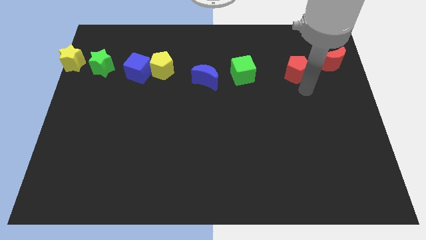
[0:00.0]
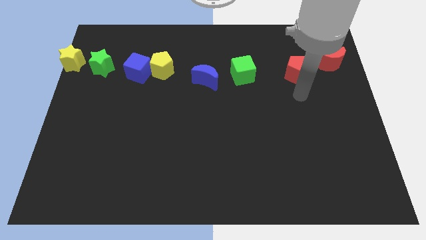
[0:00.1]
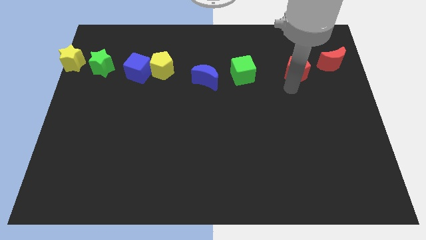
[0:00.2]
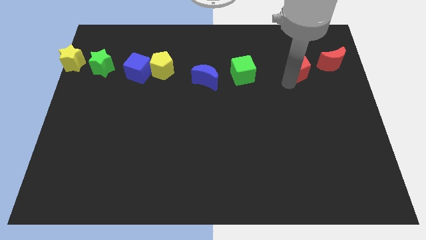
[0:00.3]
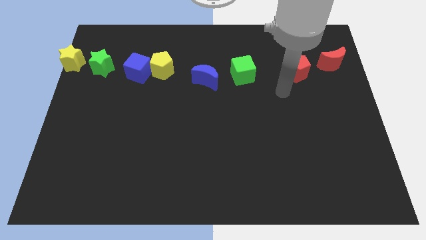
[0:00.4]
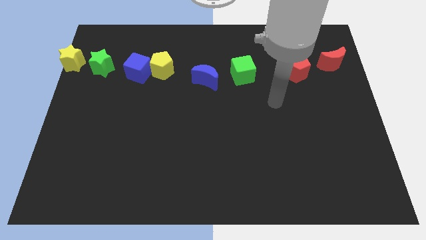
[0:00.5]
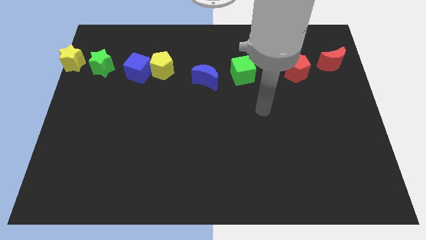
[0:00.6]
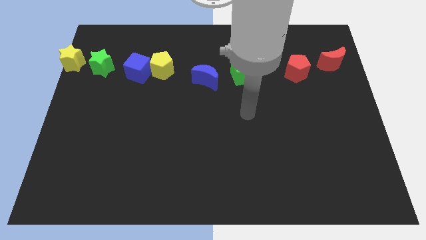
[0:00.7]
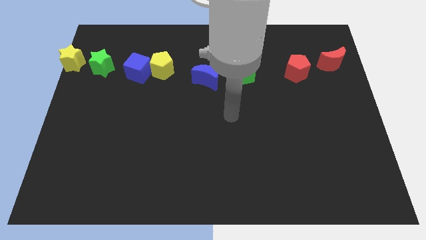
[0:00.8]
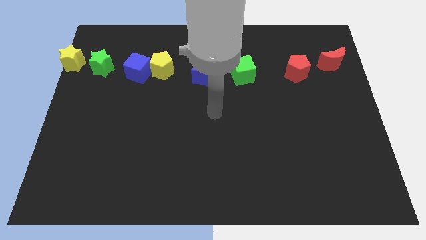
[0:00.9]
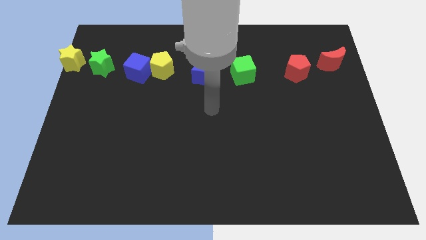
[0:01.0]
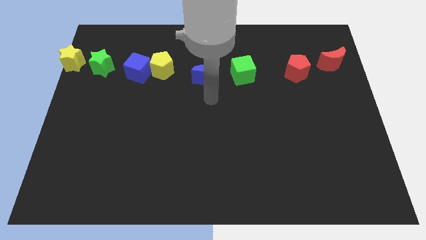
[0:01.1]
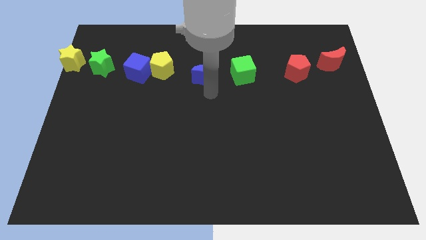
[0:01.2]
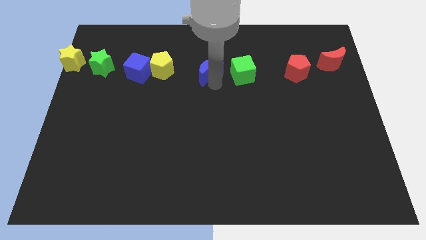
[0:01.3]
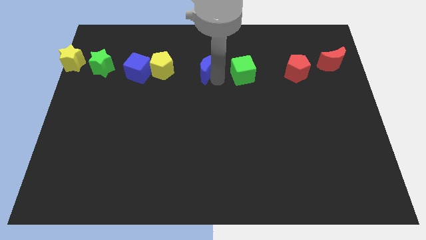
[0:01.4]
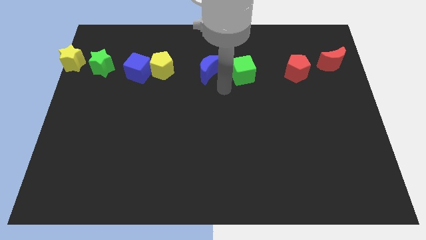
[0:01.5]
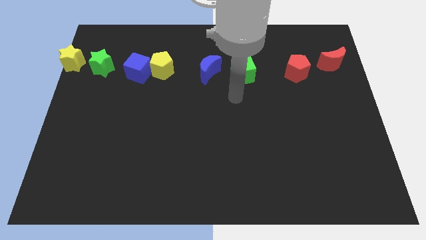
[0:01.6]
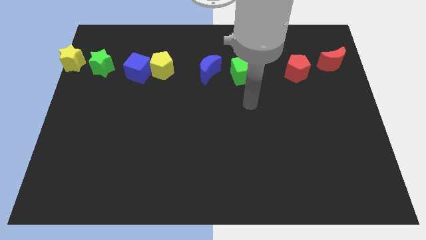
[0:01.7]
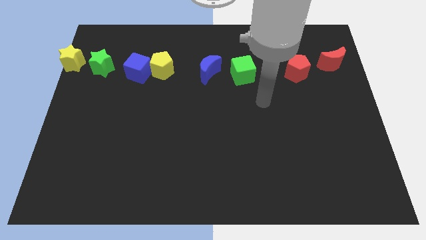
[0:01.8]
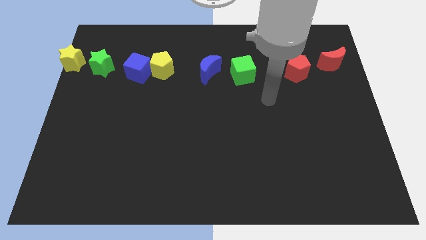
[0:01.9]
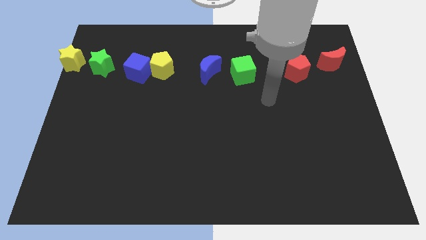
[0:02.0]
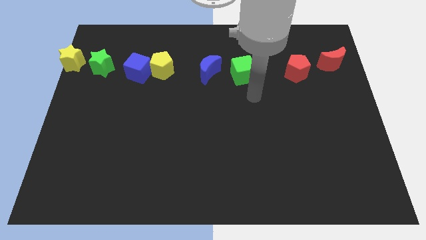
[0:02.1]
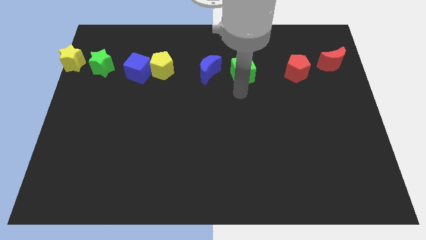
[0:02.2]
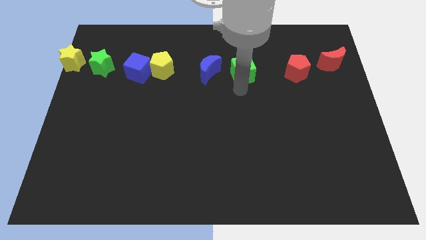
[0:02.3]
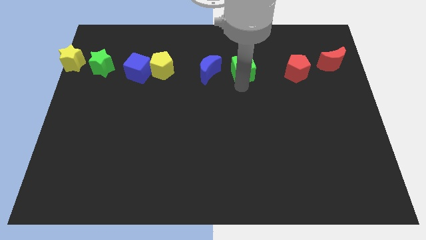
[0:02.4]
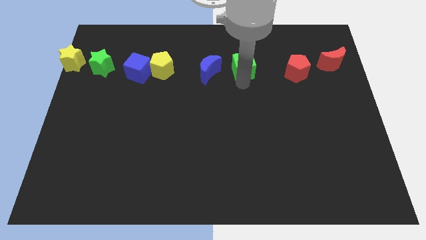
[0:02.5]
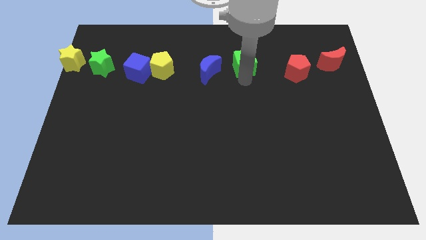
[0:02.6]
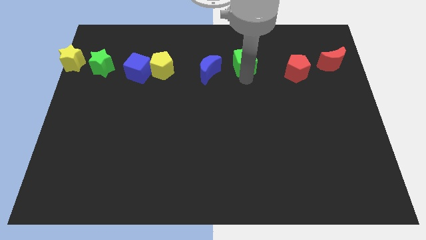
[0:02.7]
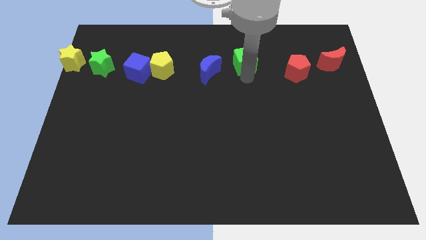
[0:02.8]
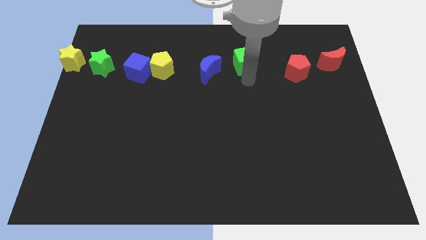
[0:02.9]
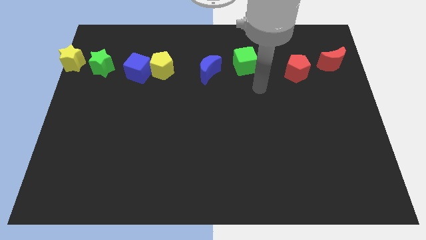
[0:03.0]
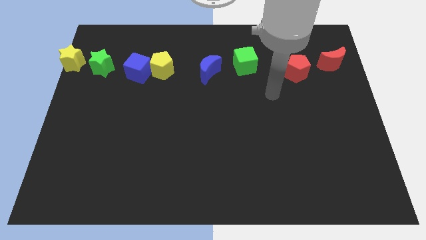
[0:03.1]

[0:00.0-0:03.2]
move blue moon and green cube towards top center

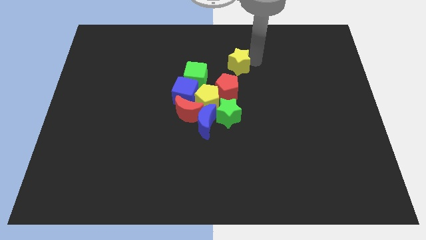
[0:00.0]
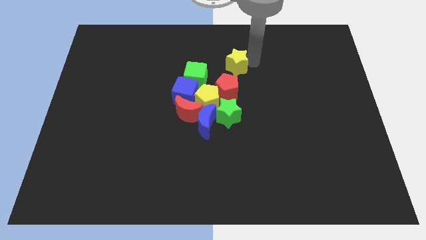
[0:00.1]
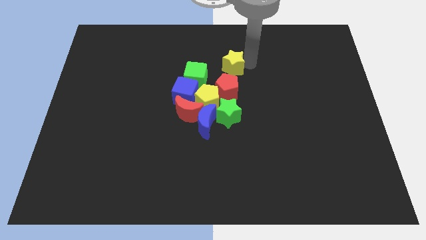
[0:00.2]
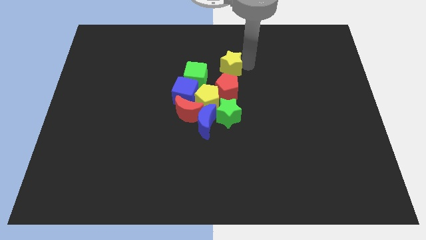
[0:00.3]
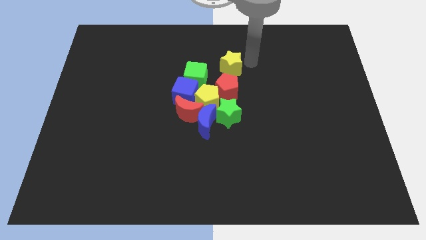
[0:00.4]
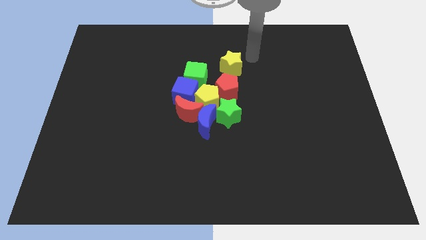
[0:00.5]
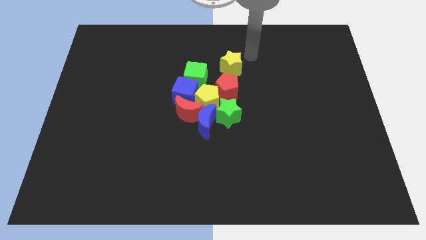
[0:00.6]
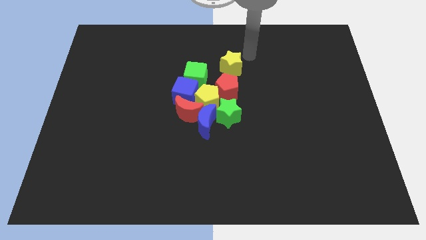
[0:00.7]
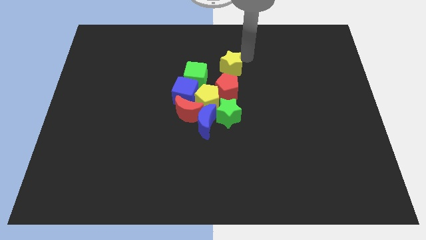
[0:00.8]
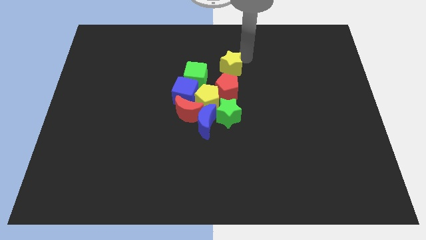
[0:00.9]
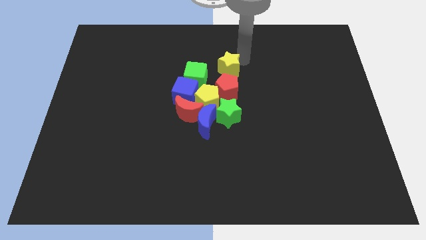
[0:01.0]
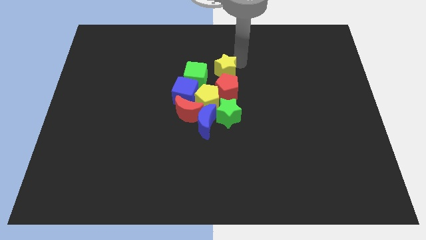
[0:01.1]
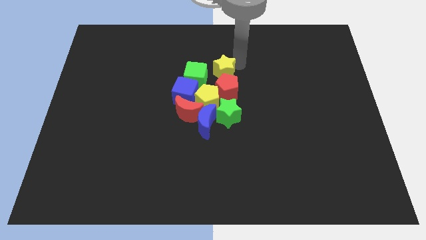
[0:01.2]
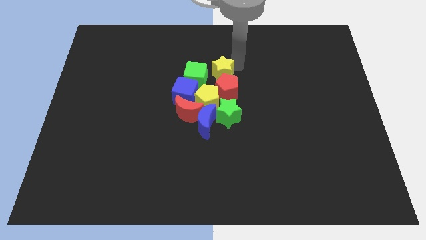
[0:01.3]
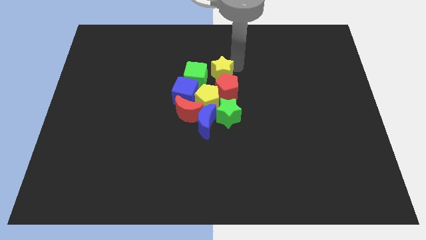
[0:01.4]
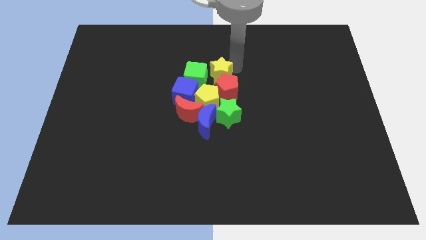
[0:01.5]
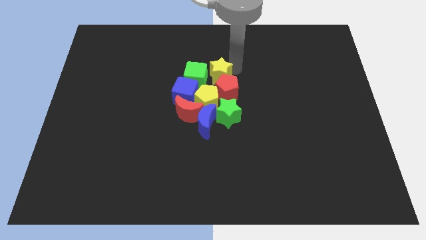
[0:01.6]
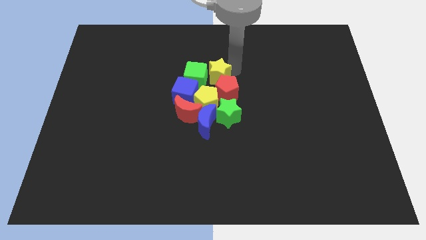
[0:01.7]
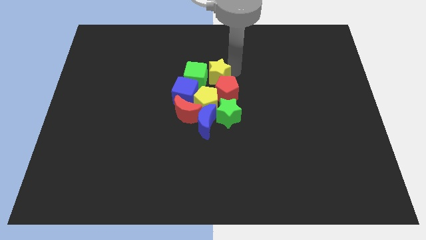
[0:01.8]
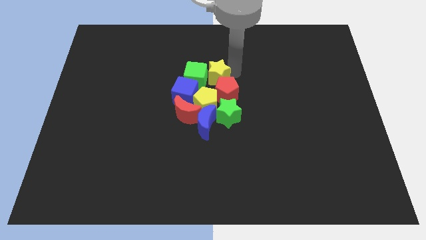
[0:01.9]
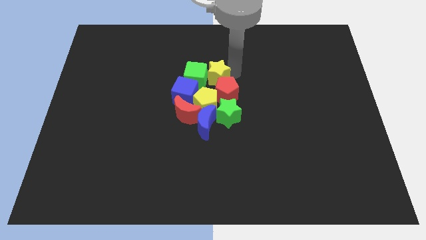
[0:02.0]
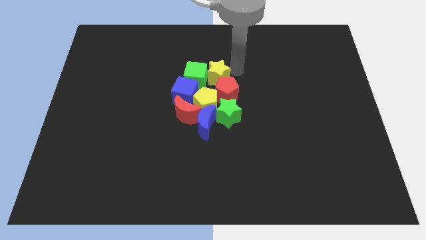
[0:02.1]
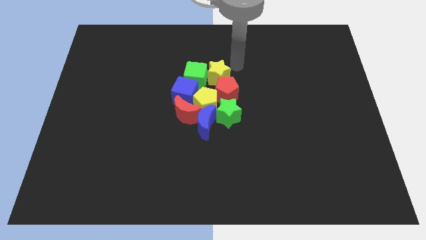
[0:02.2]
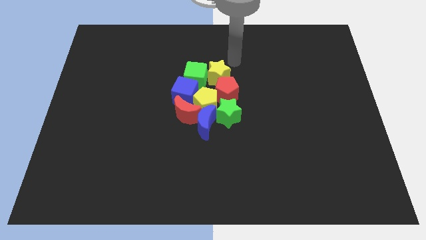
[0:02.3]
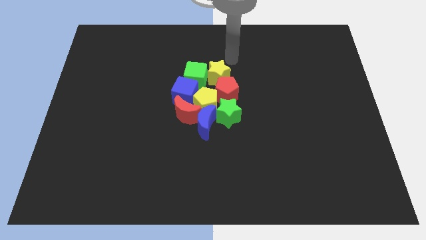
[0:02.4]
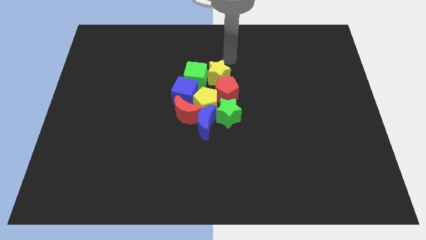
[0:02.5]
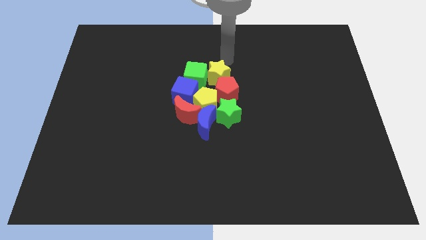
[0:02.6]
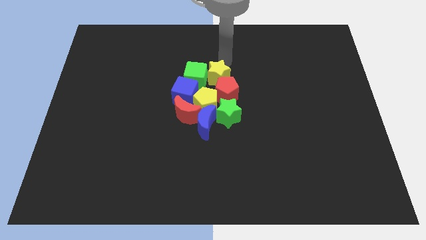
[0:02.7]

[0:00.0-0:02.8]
place the yellow star into the green cube

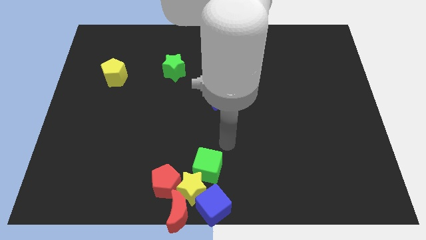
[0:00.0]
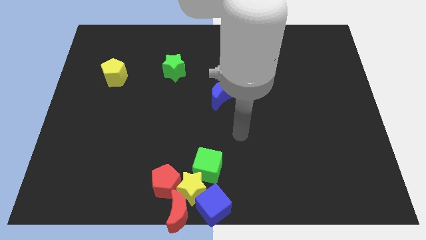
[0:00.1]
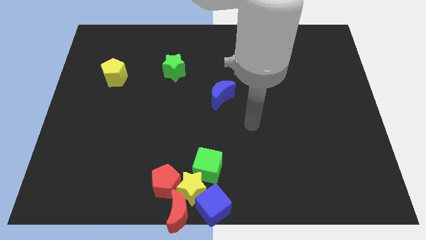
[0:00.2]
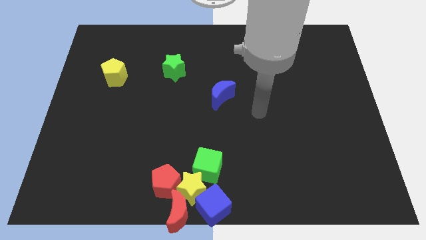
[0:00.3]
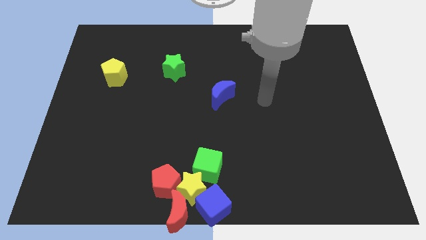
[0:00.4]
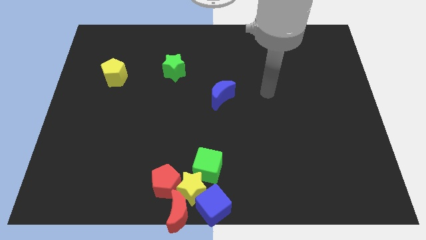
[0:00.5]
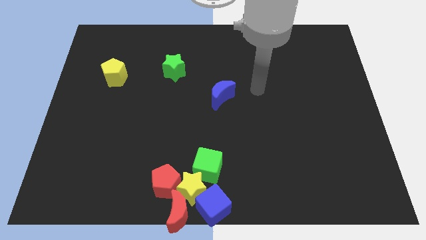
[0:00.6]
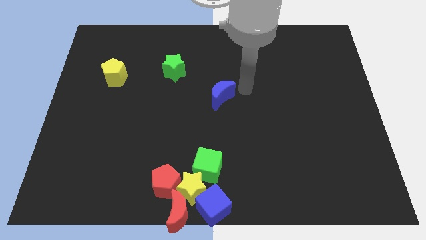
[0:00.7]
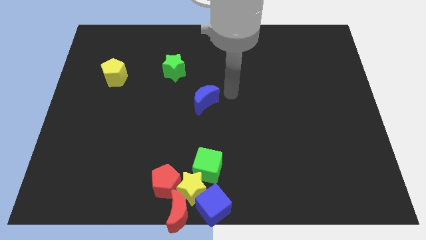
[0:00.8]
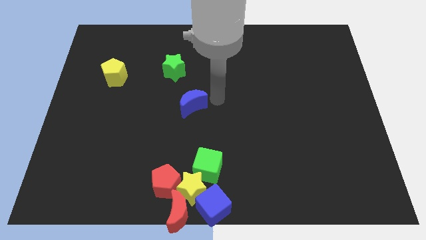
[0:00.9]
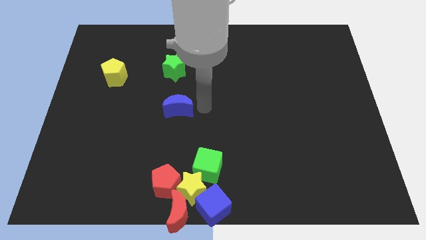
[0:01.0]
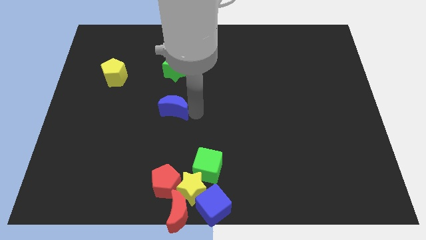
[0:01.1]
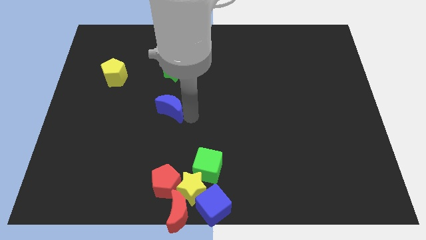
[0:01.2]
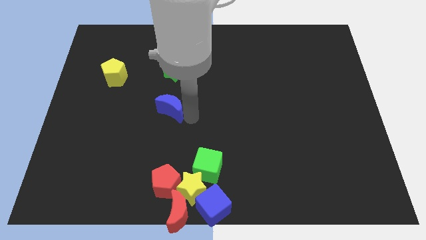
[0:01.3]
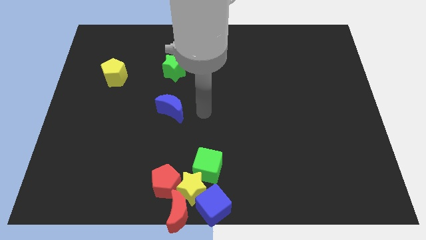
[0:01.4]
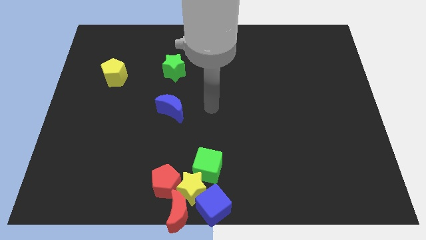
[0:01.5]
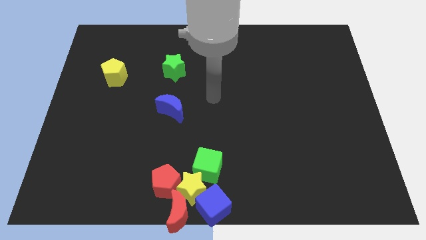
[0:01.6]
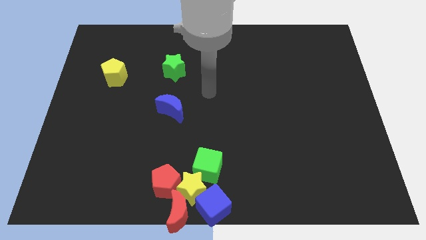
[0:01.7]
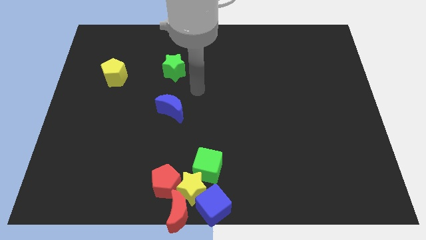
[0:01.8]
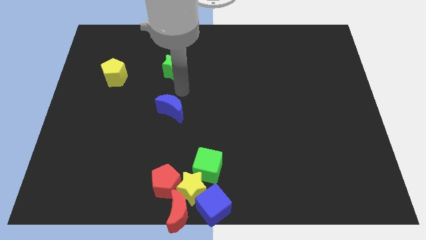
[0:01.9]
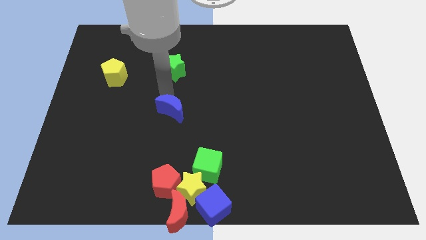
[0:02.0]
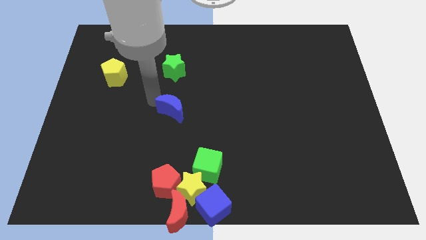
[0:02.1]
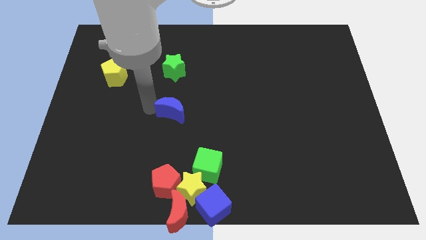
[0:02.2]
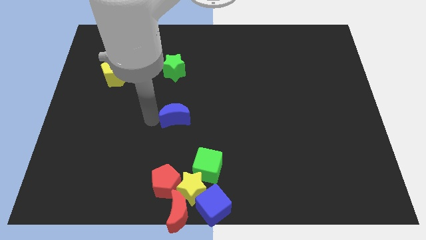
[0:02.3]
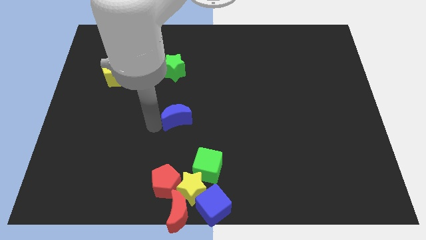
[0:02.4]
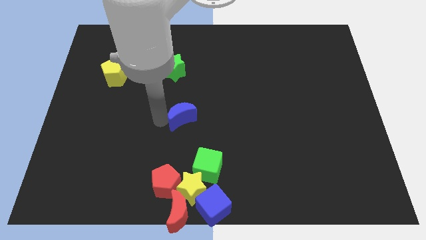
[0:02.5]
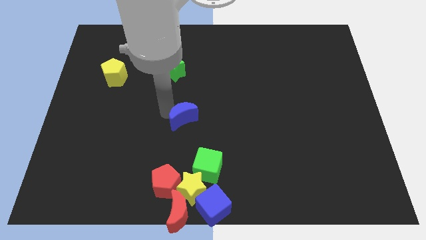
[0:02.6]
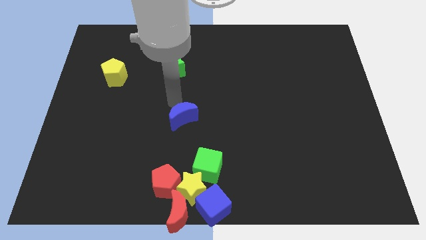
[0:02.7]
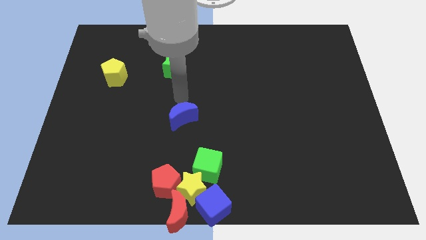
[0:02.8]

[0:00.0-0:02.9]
push the blue crescent vertical to the green cube
